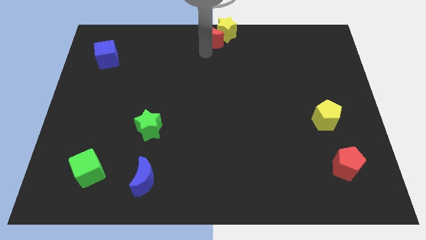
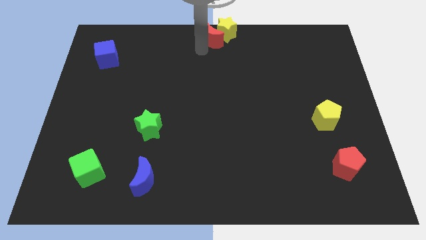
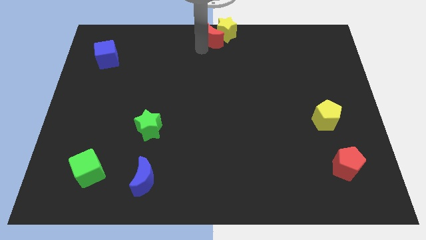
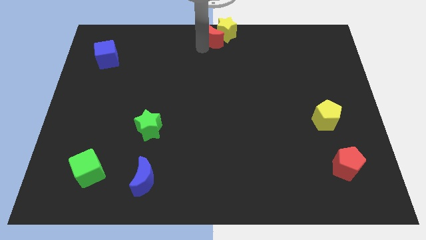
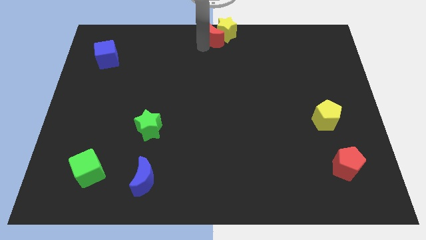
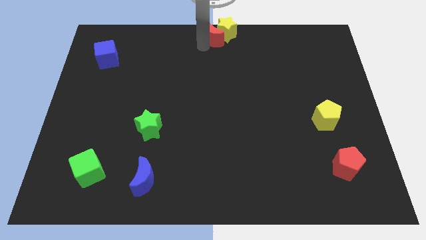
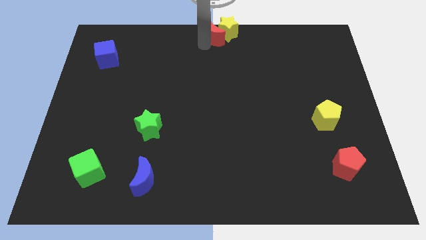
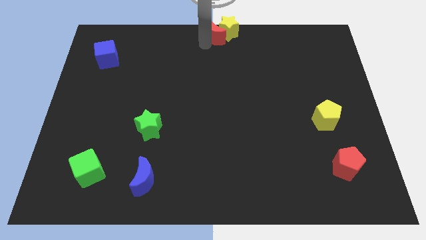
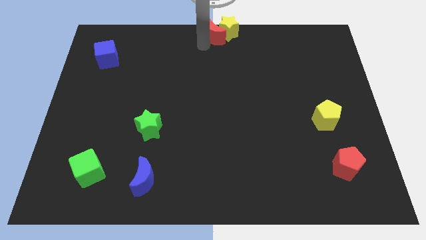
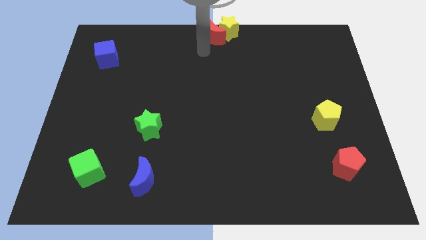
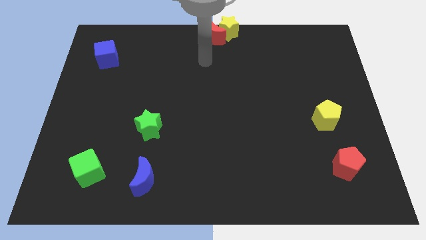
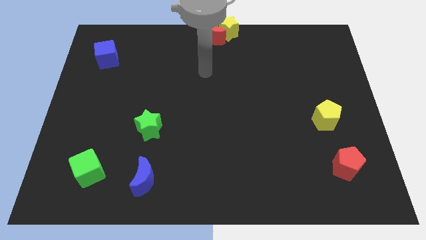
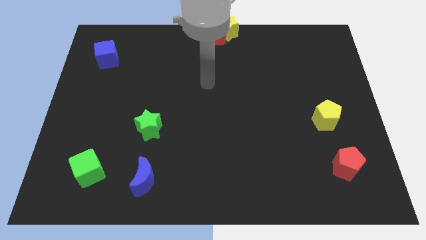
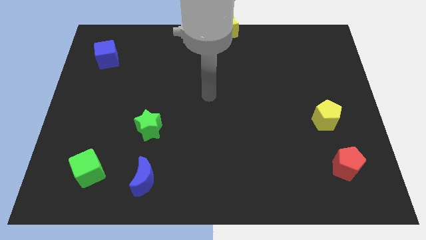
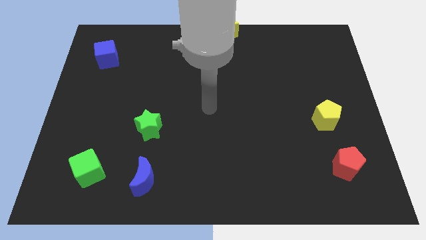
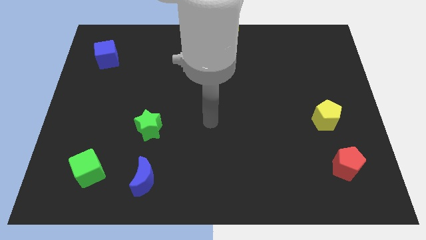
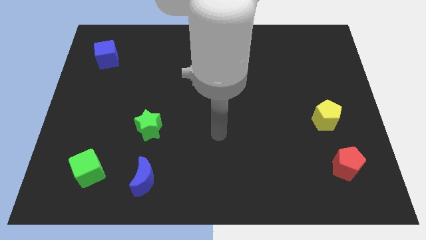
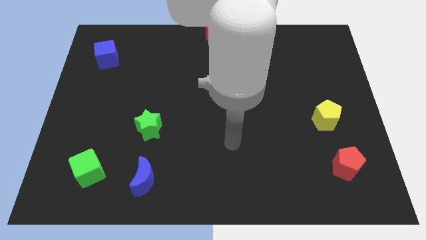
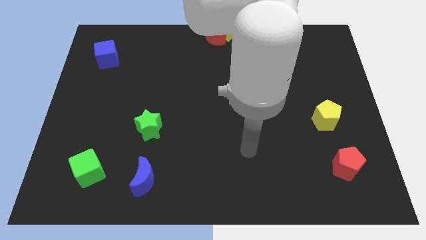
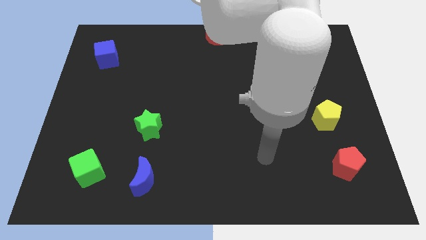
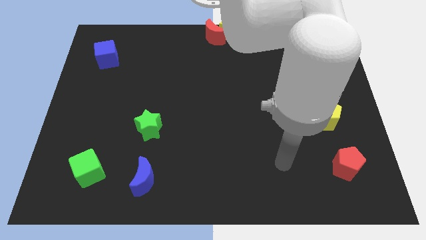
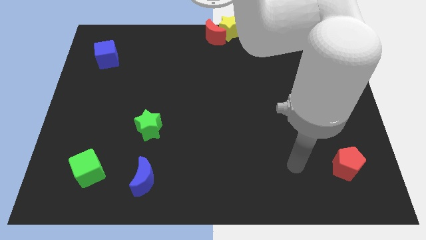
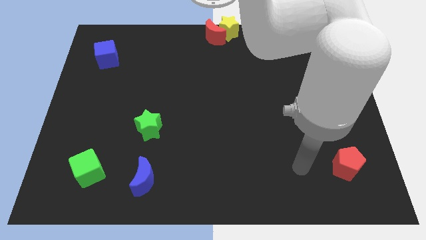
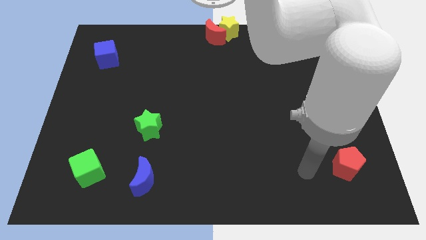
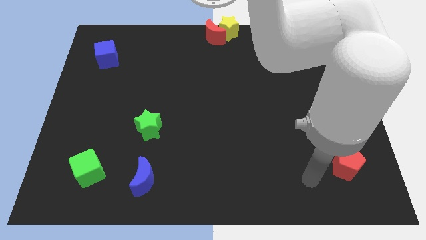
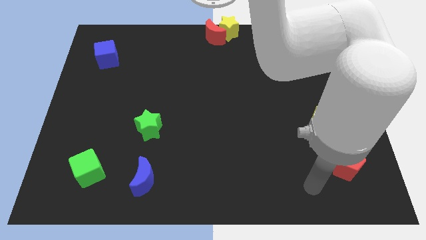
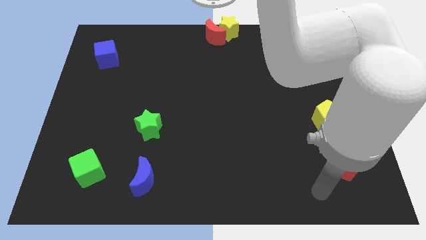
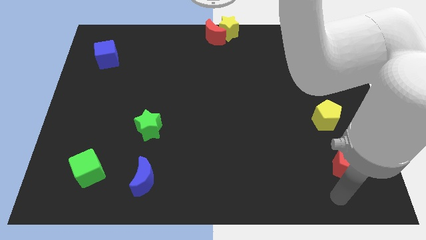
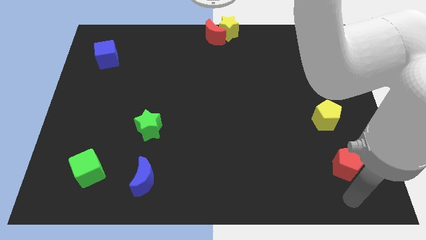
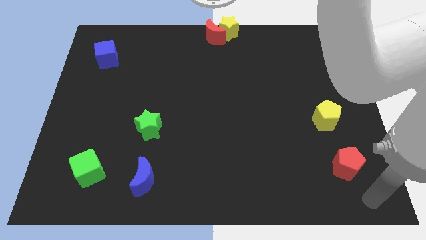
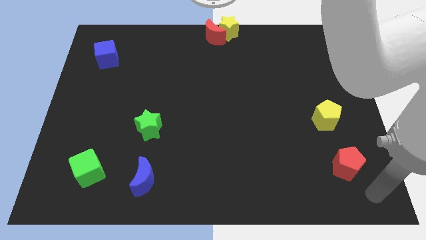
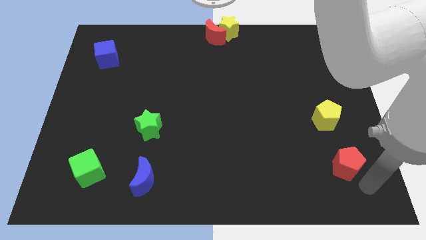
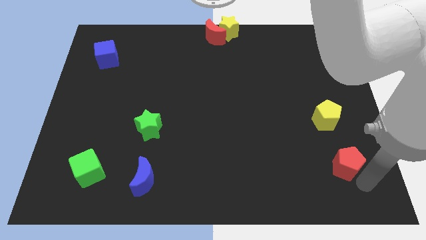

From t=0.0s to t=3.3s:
push your arm at the bottom right corner

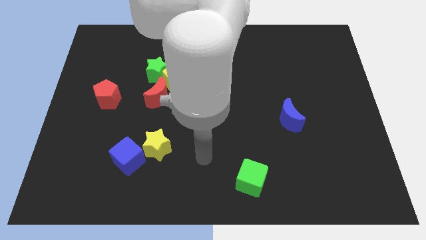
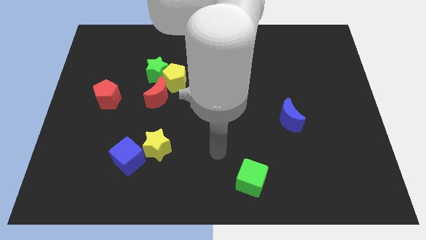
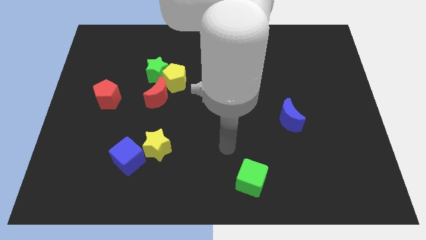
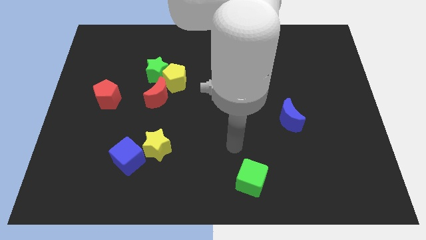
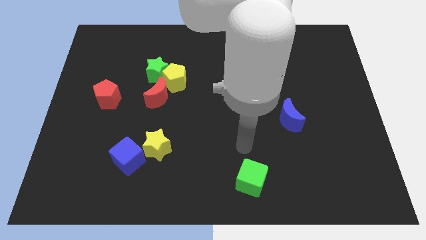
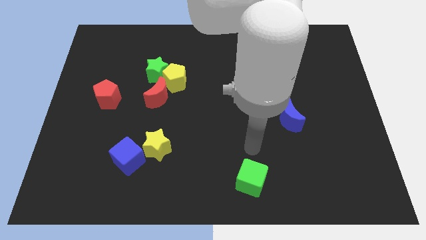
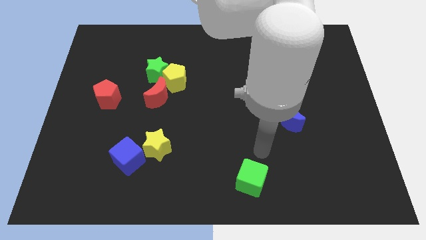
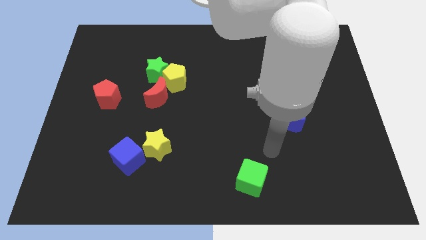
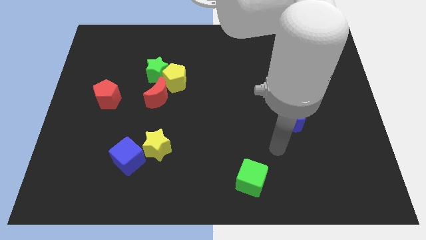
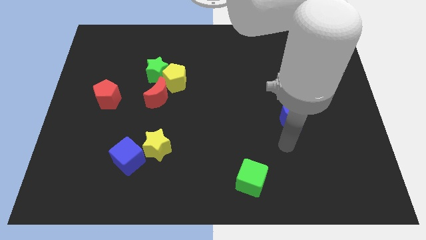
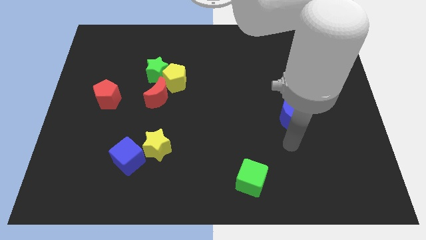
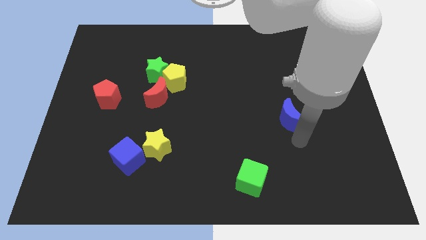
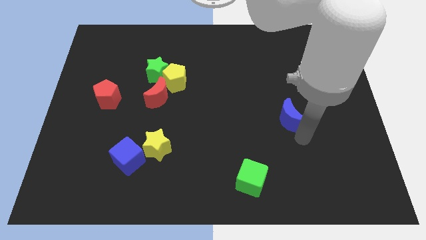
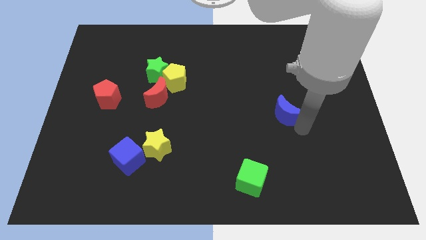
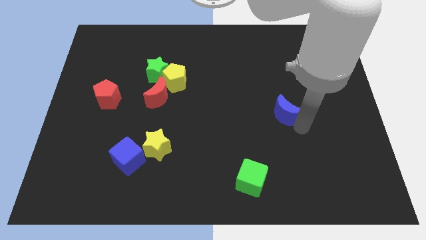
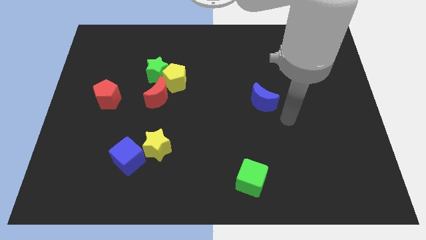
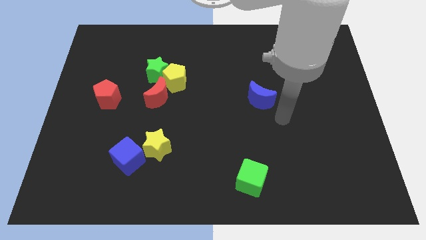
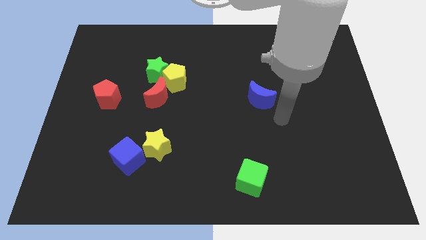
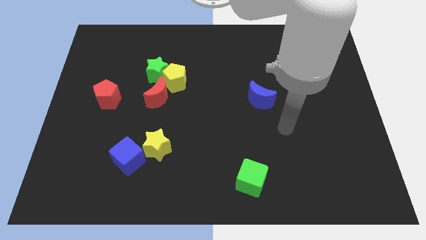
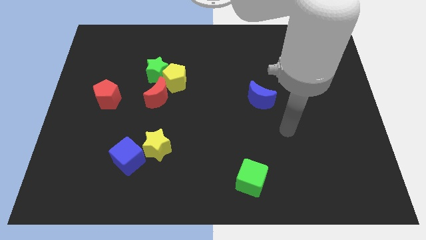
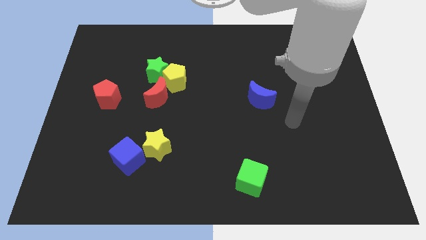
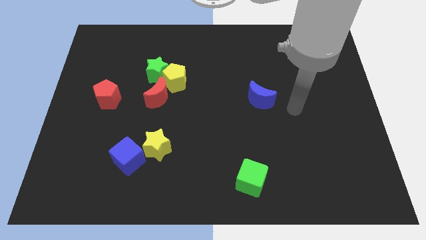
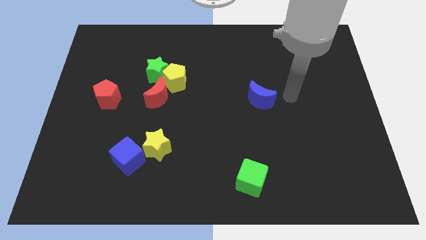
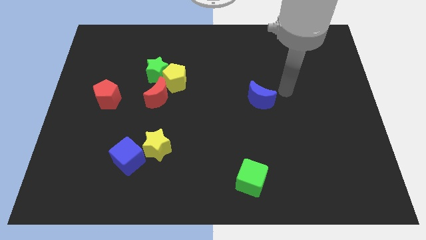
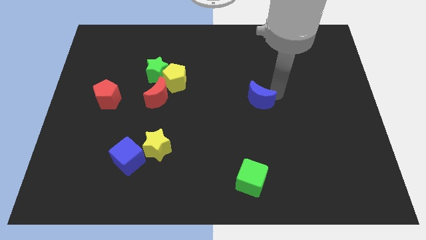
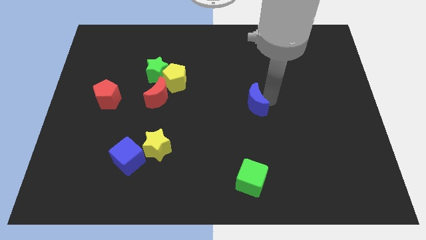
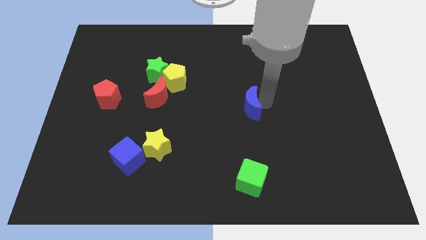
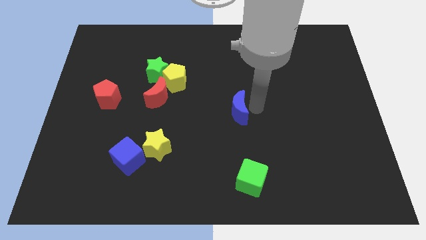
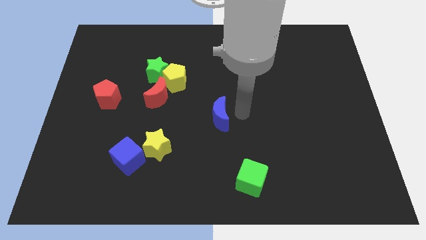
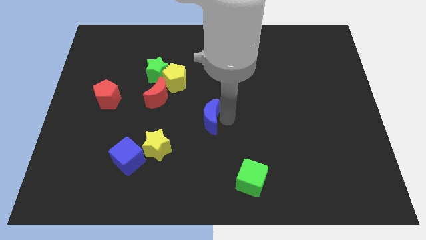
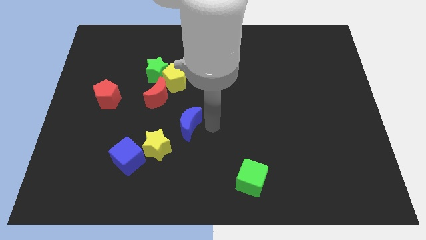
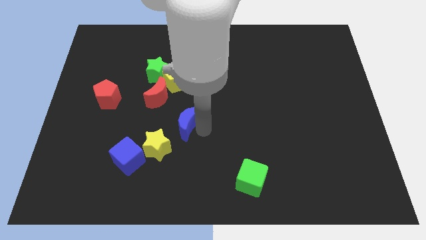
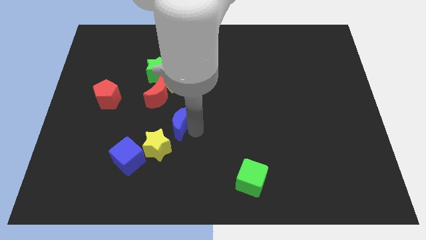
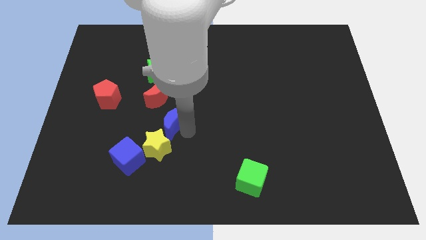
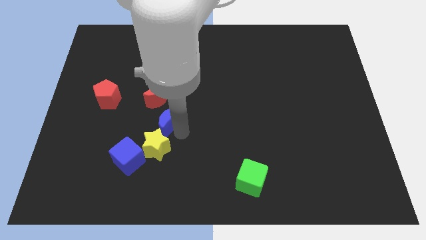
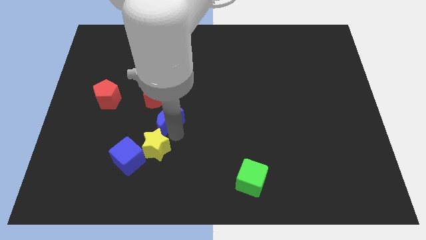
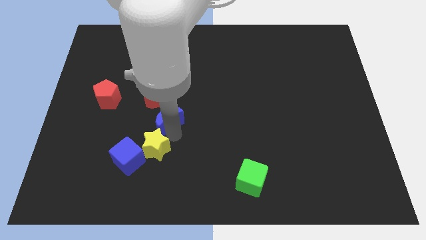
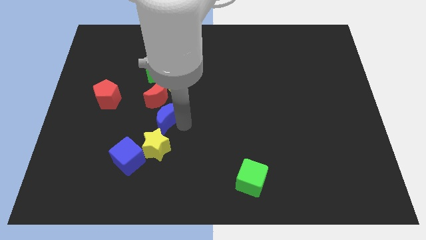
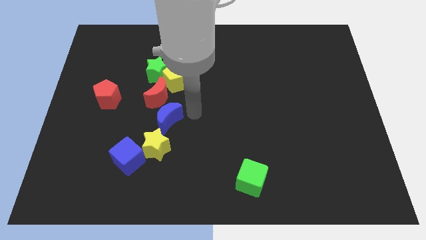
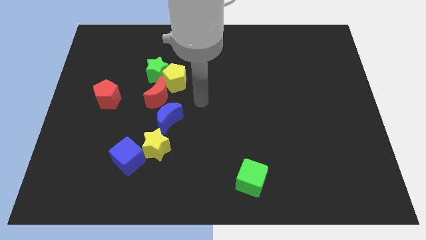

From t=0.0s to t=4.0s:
place the blue crescent in between yellow star and yellow pentagon

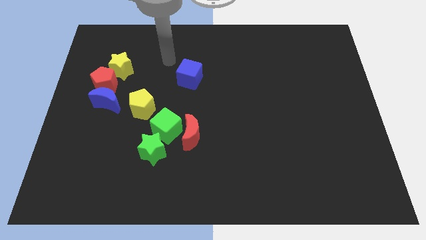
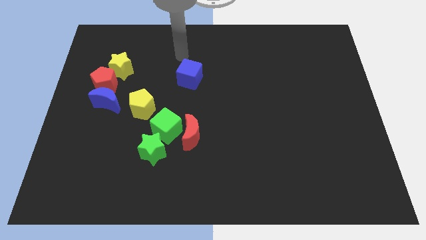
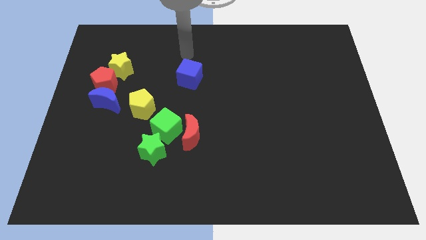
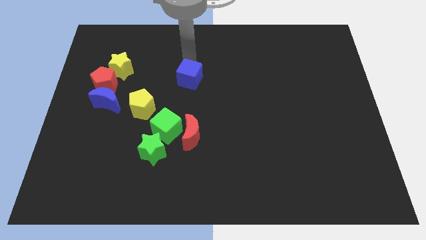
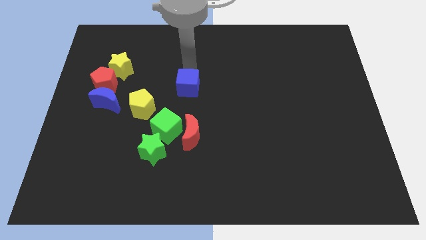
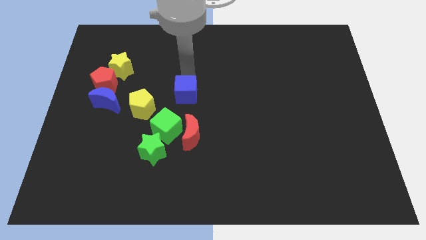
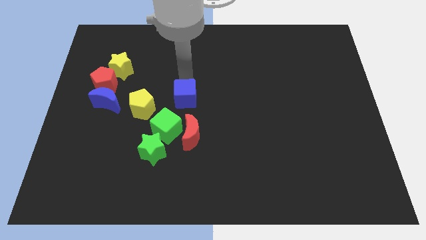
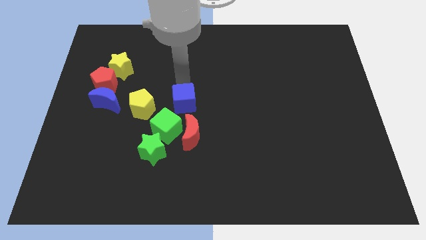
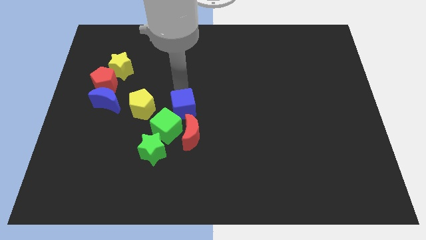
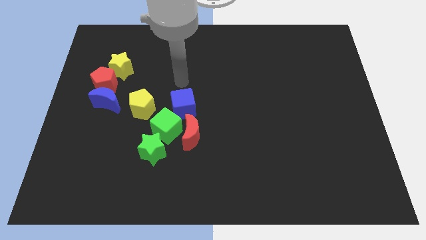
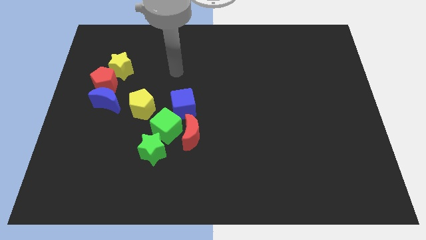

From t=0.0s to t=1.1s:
put the blue cube at the top right side of green cube

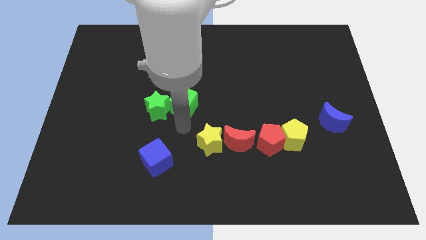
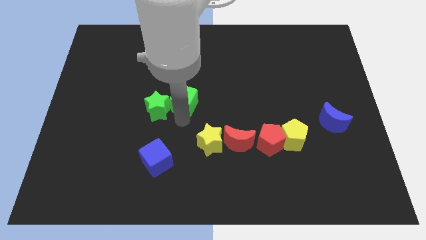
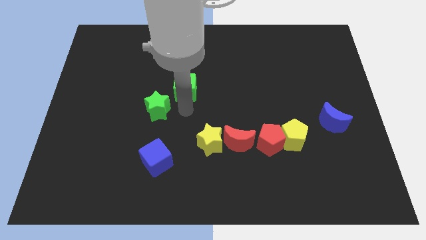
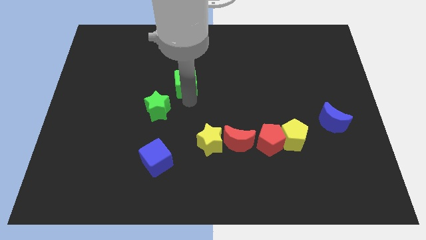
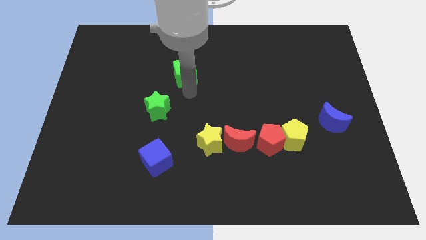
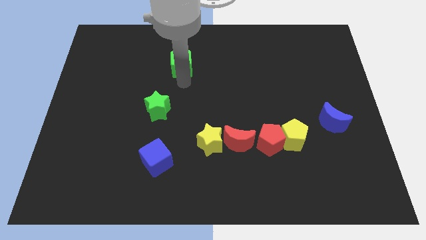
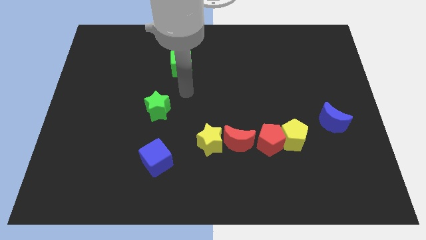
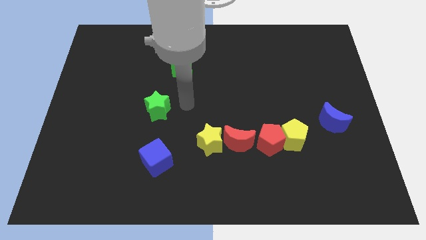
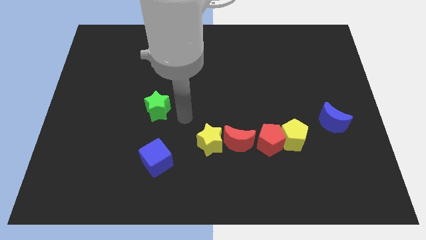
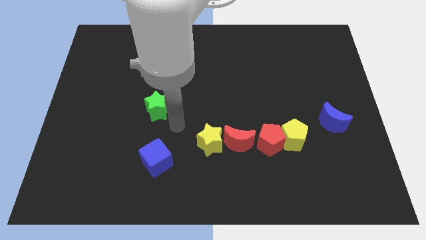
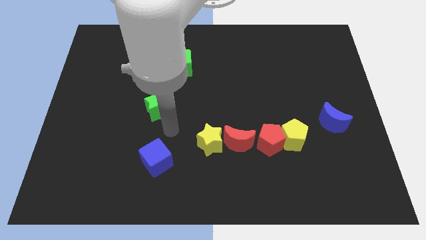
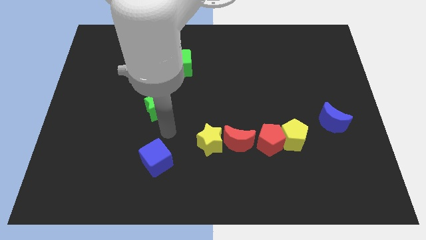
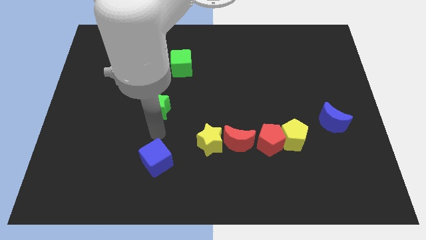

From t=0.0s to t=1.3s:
separate the green cube from the green star
